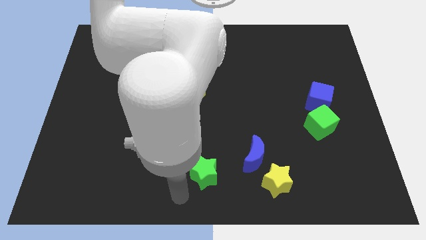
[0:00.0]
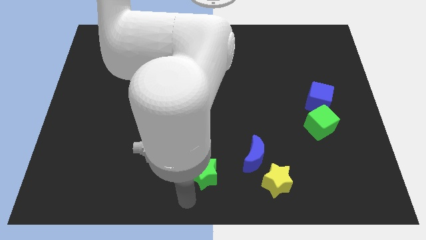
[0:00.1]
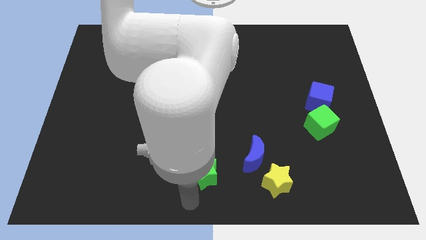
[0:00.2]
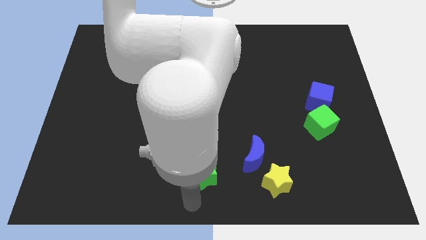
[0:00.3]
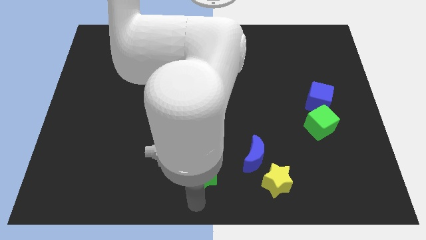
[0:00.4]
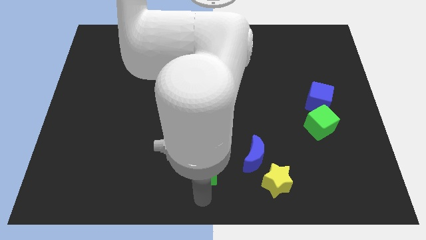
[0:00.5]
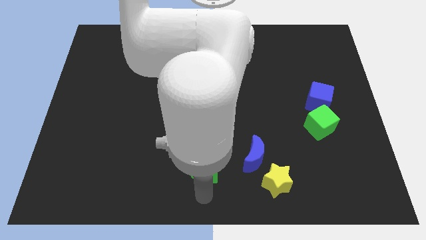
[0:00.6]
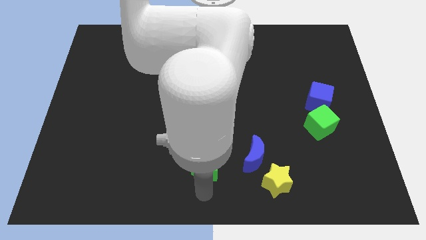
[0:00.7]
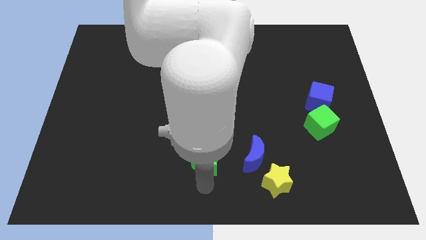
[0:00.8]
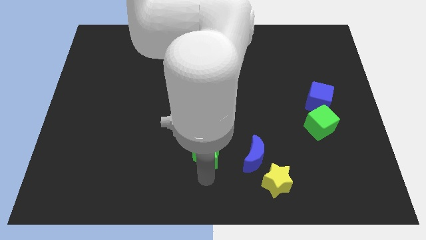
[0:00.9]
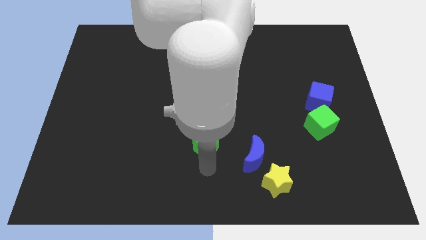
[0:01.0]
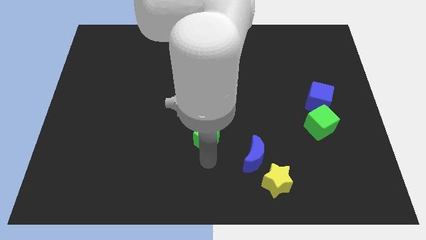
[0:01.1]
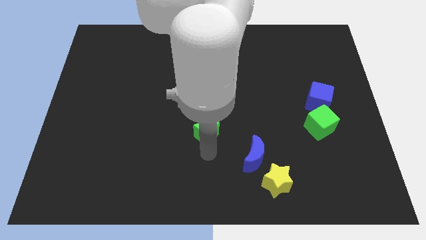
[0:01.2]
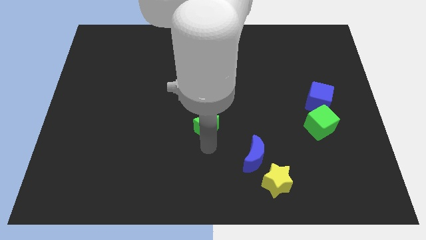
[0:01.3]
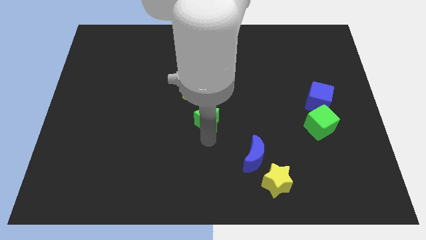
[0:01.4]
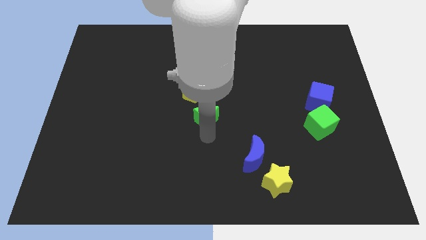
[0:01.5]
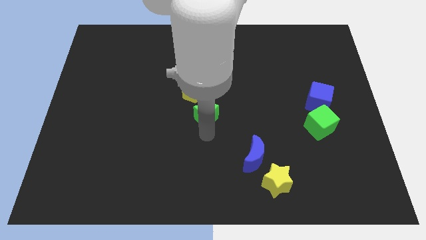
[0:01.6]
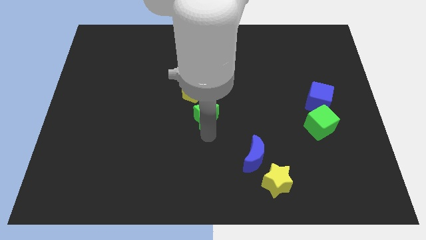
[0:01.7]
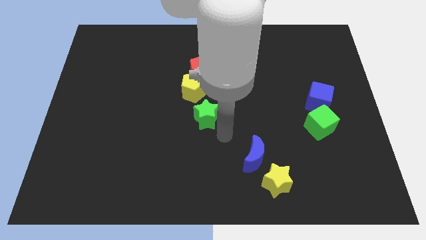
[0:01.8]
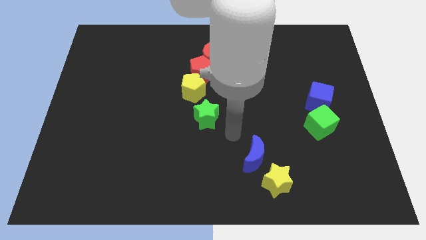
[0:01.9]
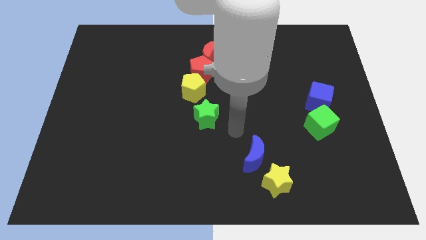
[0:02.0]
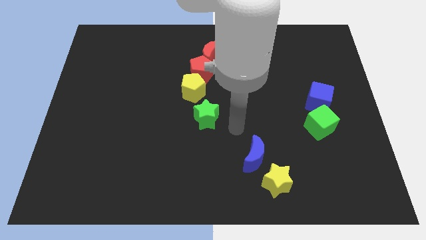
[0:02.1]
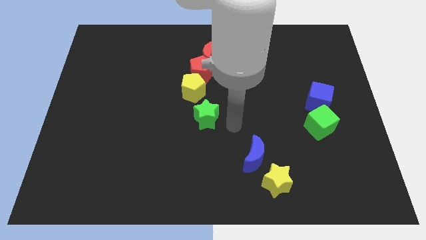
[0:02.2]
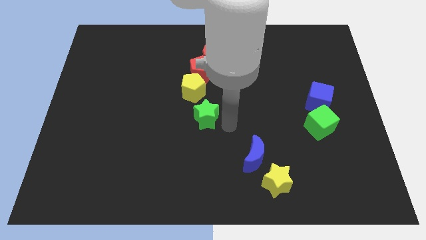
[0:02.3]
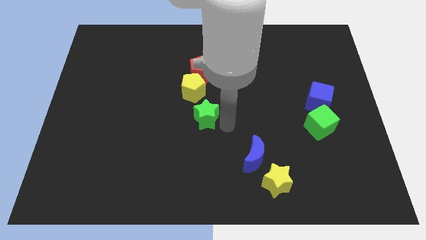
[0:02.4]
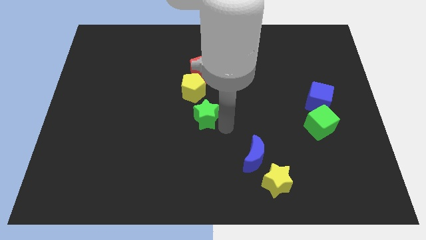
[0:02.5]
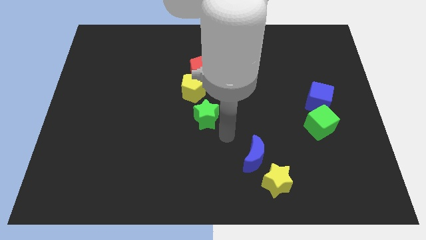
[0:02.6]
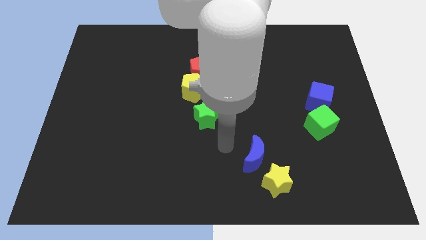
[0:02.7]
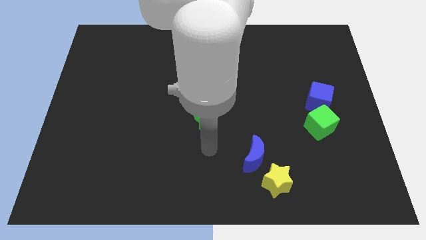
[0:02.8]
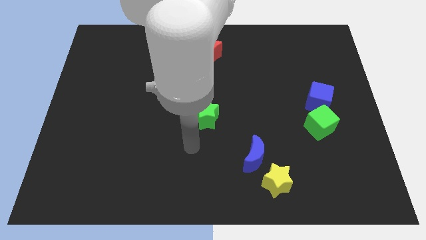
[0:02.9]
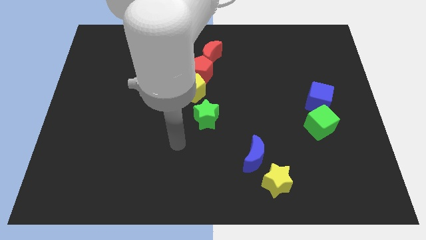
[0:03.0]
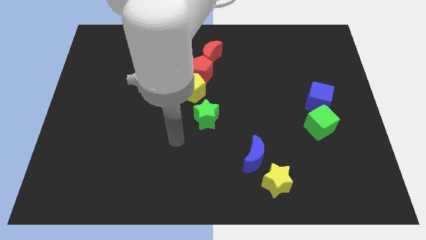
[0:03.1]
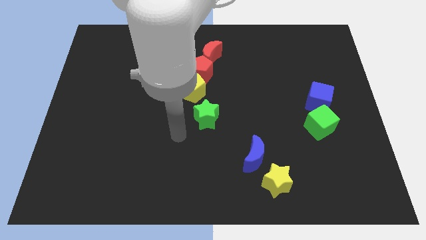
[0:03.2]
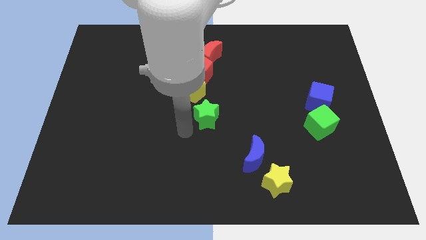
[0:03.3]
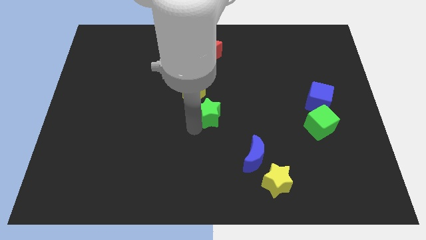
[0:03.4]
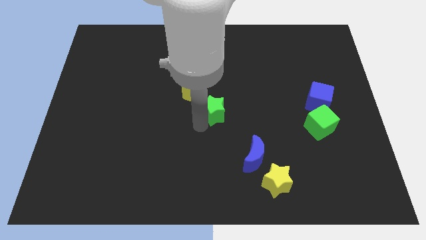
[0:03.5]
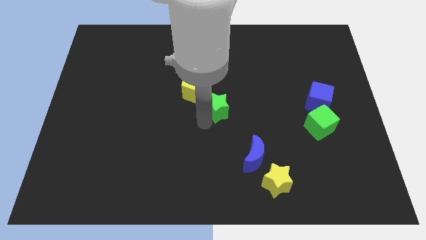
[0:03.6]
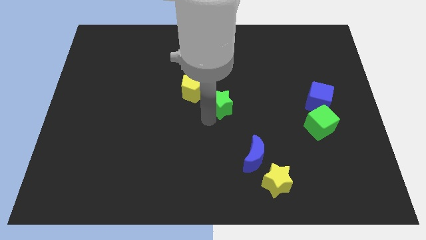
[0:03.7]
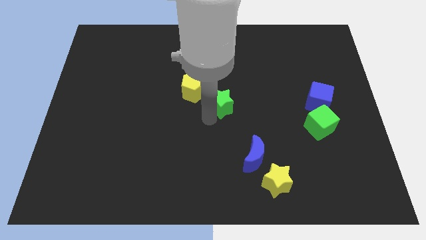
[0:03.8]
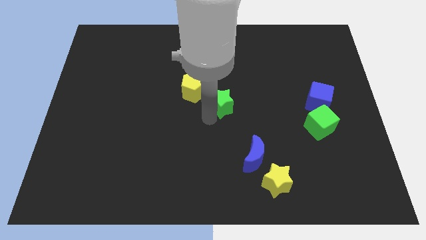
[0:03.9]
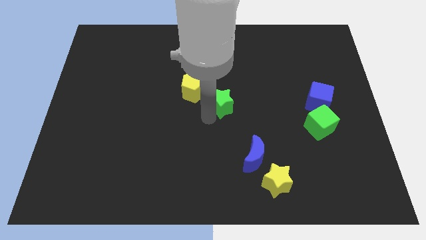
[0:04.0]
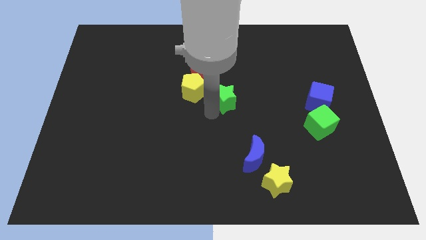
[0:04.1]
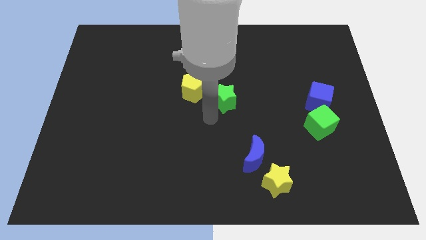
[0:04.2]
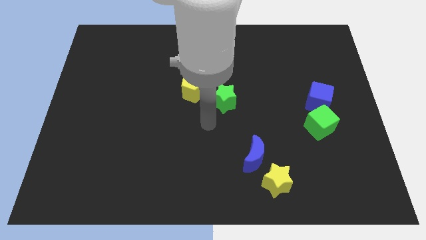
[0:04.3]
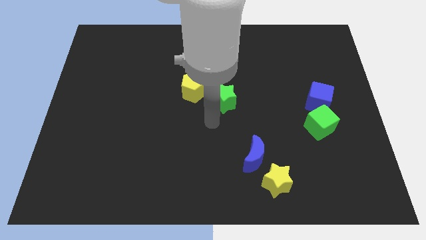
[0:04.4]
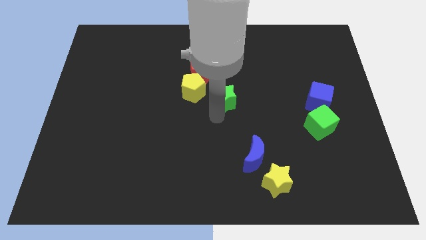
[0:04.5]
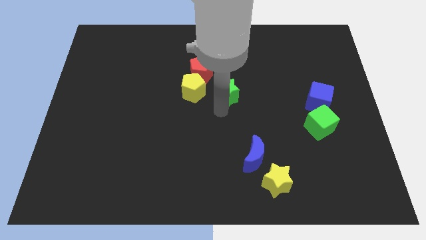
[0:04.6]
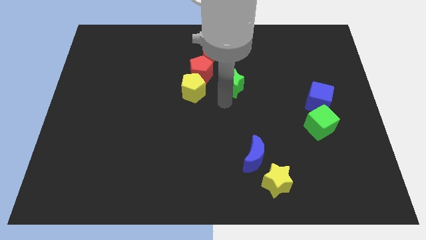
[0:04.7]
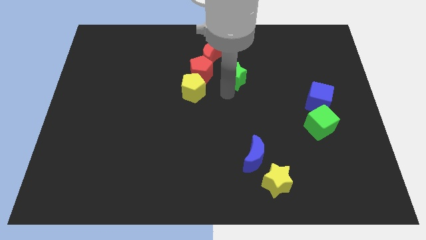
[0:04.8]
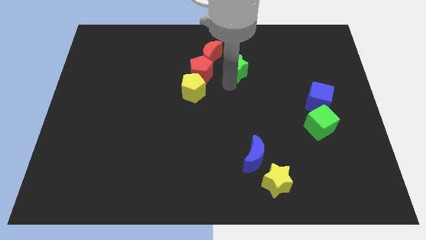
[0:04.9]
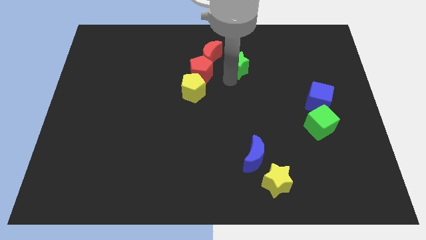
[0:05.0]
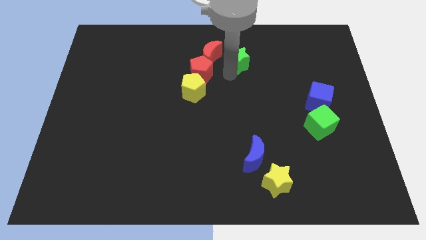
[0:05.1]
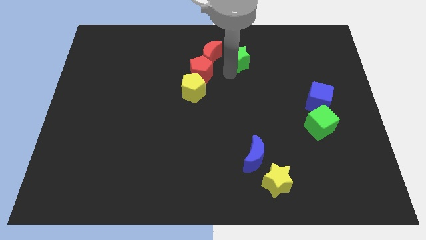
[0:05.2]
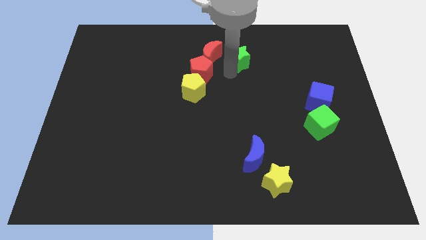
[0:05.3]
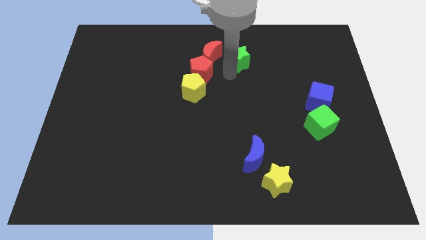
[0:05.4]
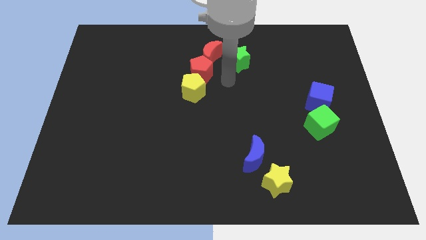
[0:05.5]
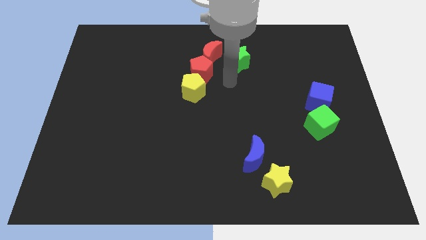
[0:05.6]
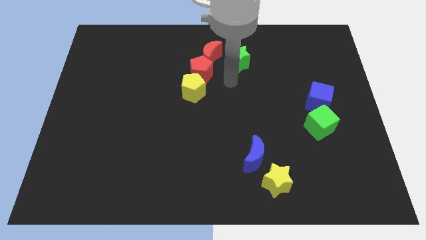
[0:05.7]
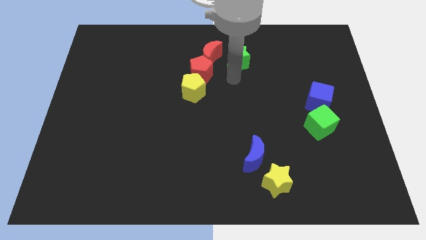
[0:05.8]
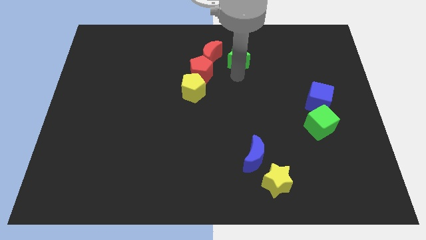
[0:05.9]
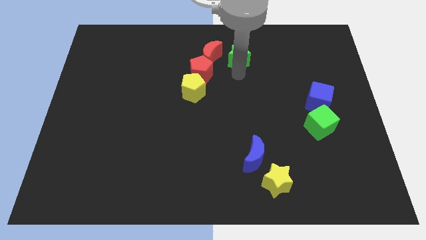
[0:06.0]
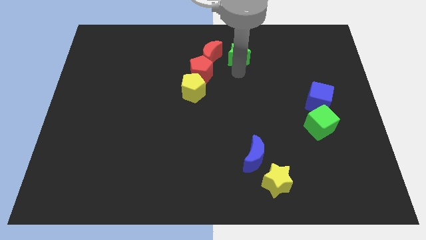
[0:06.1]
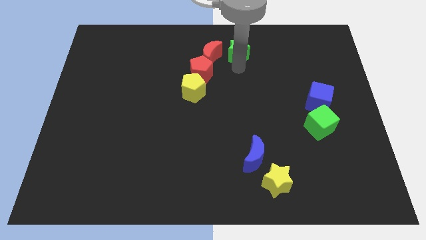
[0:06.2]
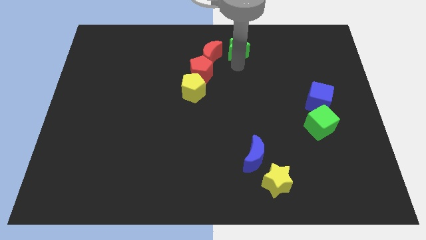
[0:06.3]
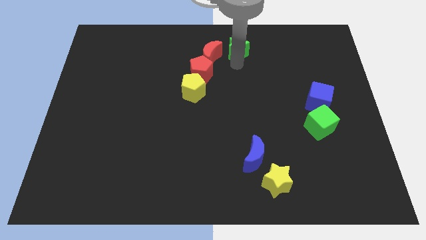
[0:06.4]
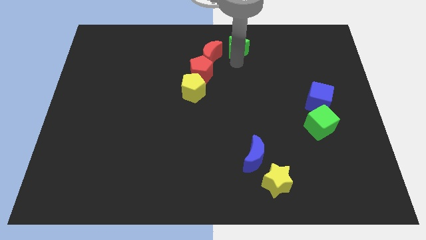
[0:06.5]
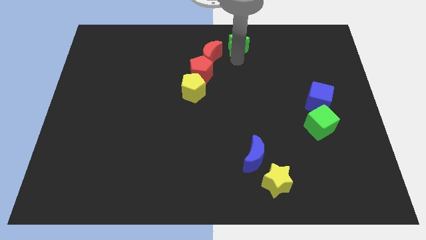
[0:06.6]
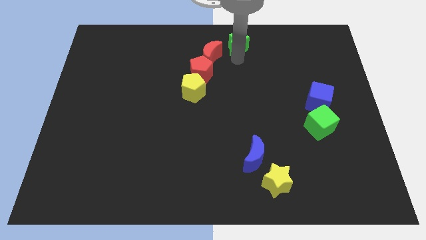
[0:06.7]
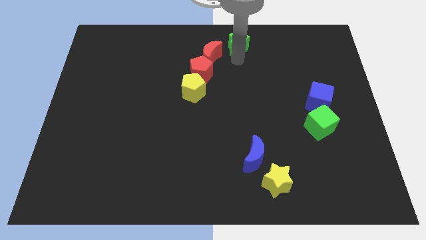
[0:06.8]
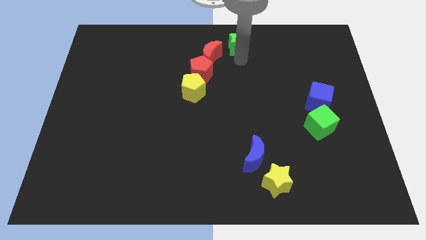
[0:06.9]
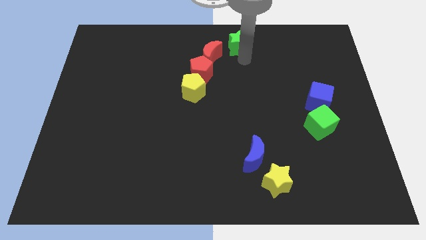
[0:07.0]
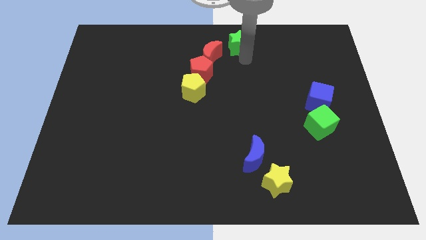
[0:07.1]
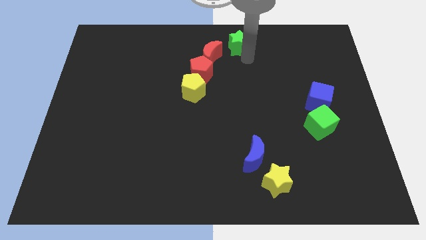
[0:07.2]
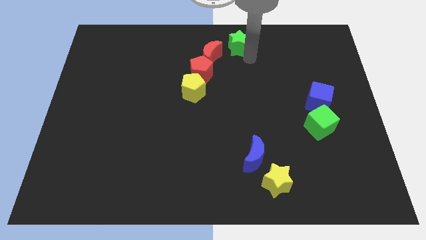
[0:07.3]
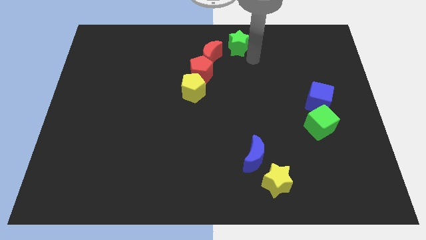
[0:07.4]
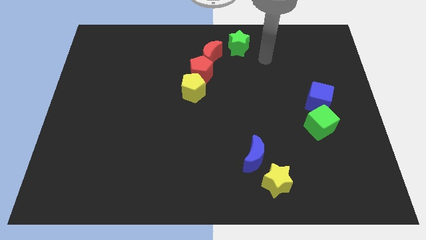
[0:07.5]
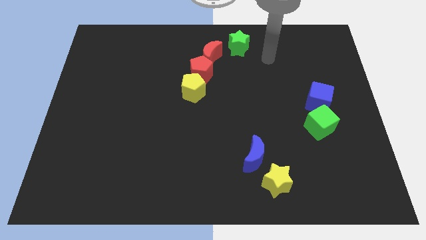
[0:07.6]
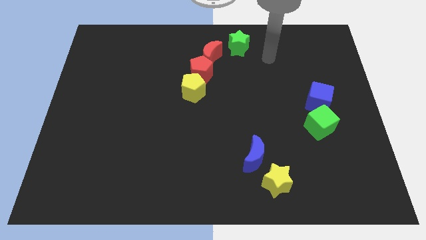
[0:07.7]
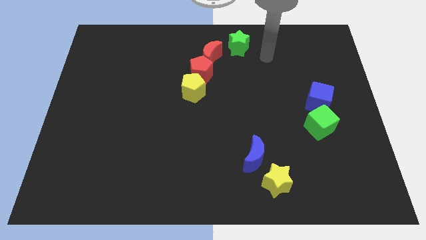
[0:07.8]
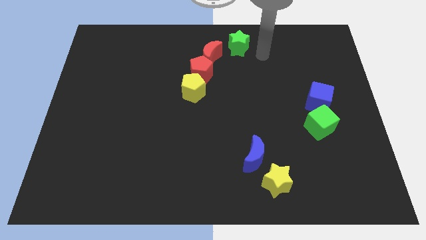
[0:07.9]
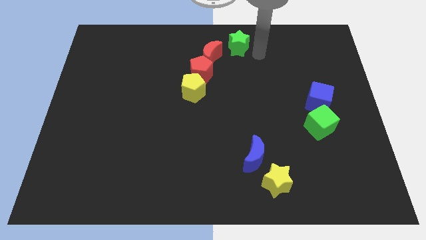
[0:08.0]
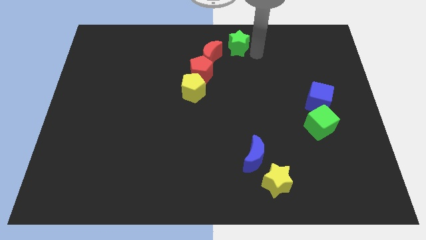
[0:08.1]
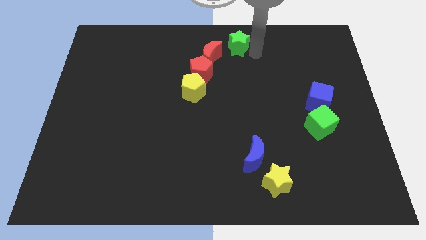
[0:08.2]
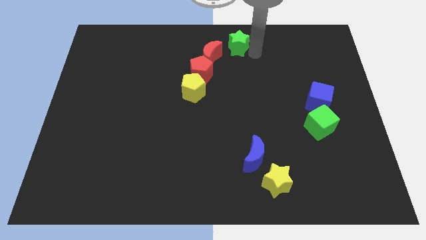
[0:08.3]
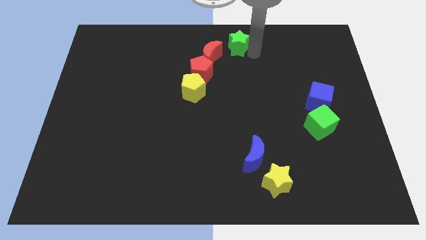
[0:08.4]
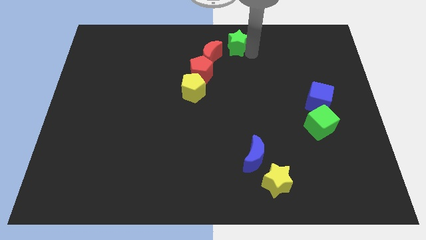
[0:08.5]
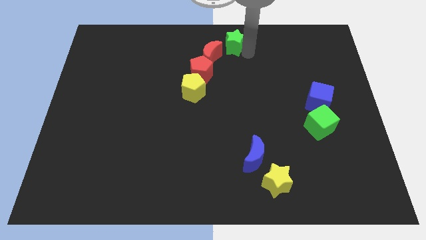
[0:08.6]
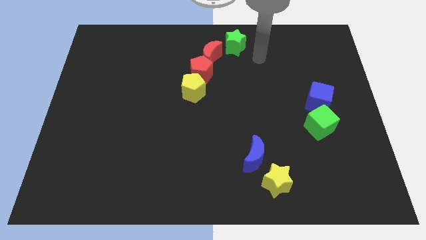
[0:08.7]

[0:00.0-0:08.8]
place the green star at the top center
